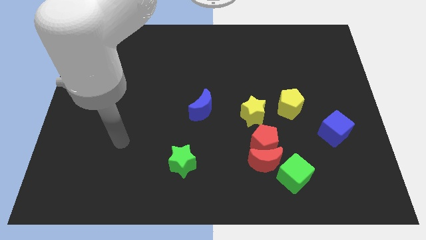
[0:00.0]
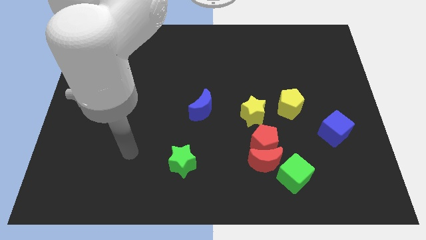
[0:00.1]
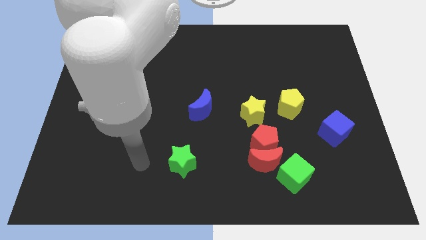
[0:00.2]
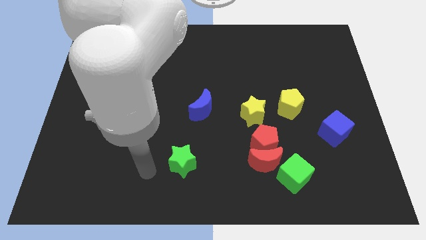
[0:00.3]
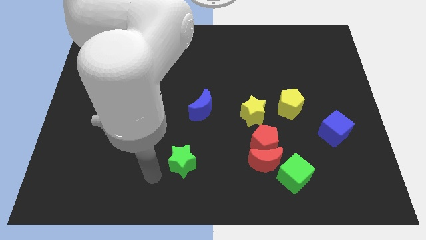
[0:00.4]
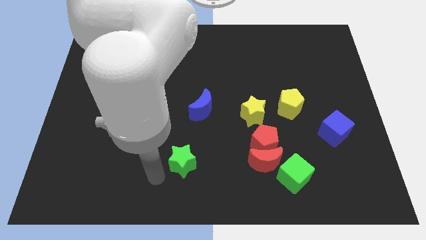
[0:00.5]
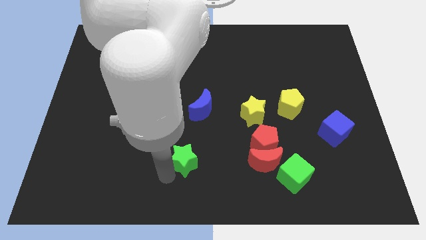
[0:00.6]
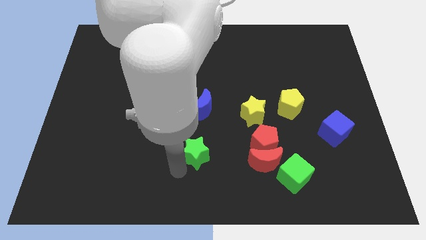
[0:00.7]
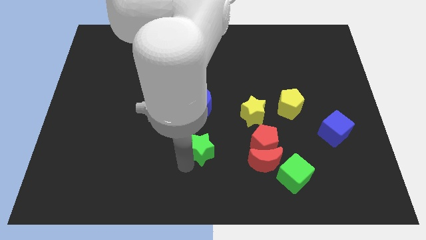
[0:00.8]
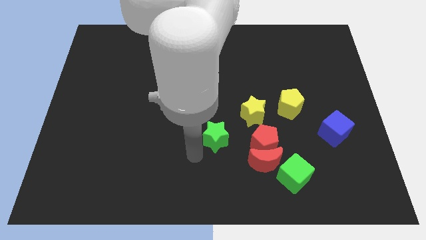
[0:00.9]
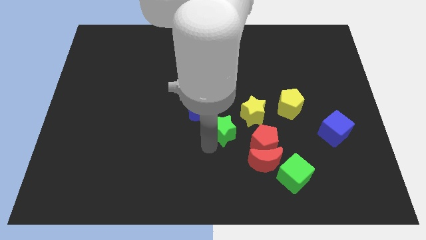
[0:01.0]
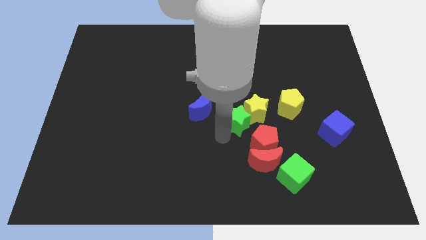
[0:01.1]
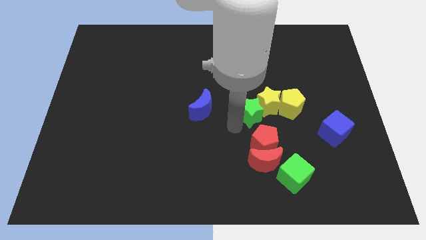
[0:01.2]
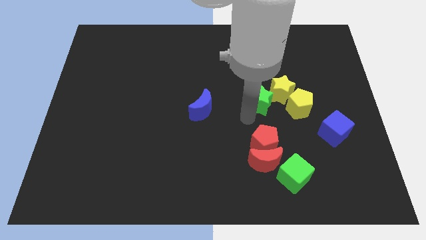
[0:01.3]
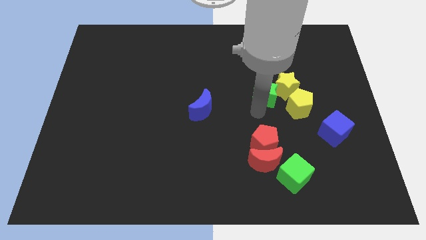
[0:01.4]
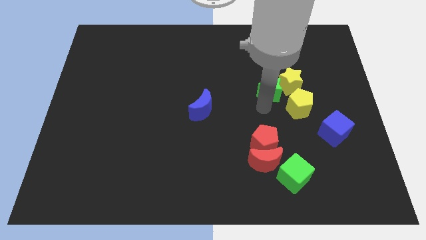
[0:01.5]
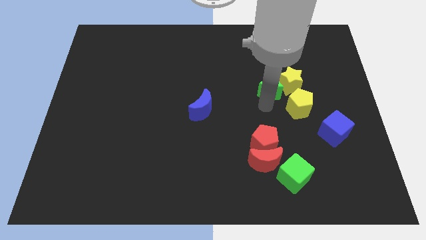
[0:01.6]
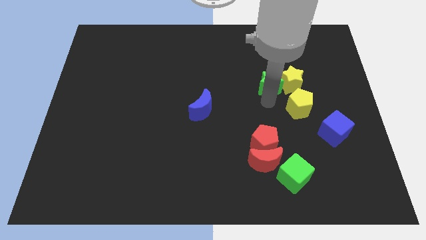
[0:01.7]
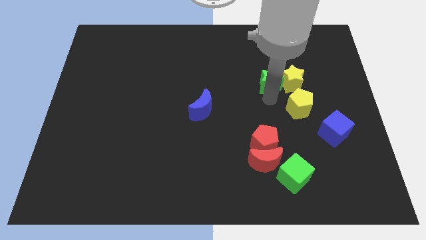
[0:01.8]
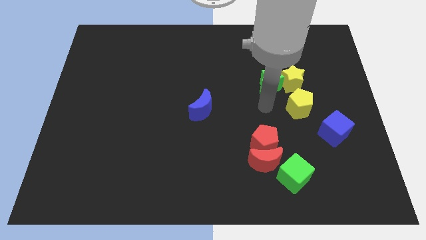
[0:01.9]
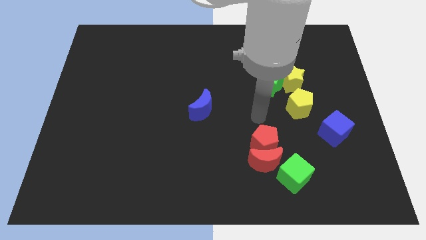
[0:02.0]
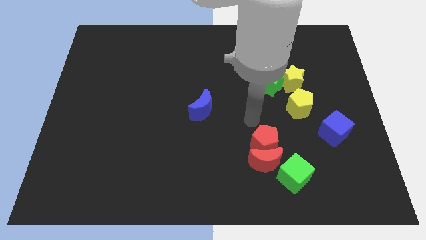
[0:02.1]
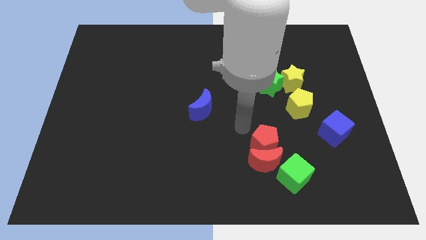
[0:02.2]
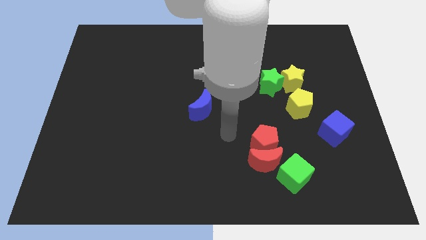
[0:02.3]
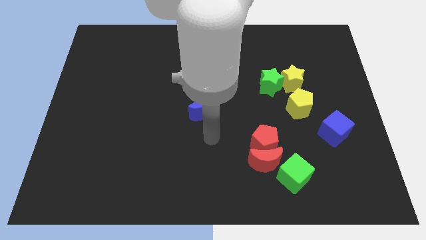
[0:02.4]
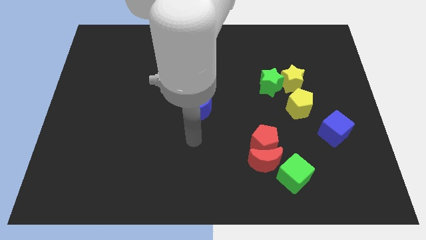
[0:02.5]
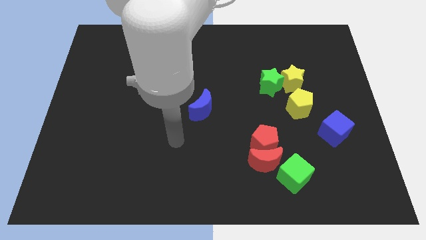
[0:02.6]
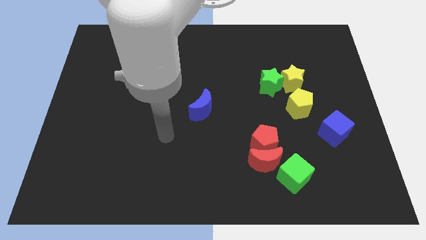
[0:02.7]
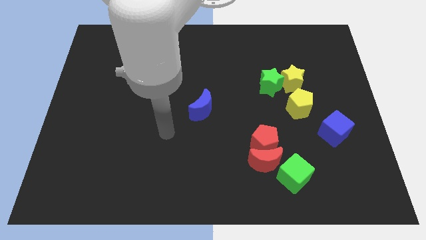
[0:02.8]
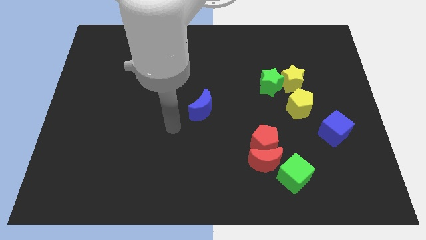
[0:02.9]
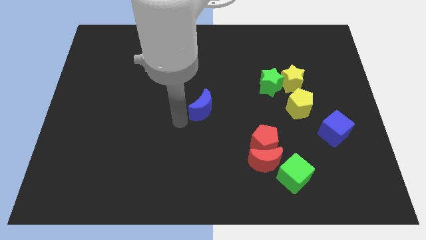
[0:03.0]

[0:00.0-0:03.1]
place the arm near the blue moon

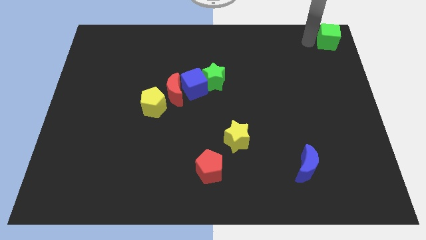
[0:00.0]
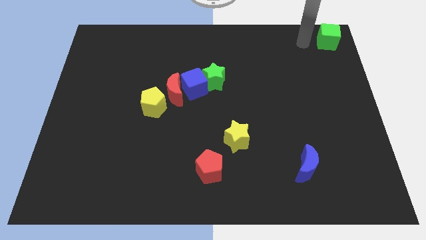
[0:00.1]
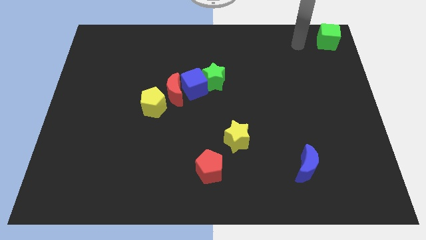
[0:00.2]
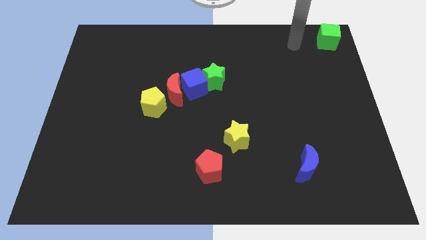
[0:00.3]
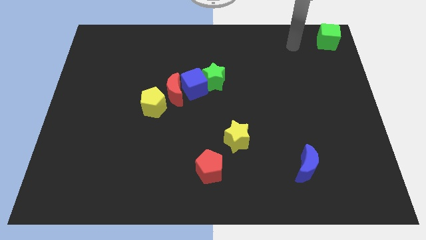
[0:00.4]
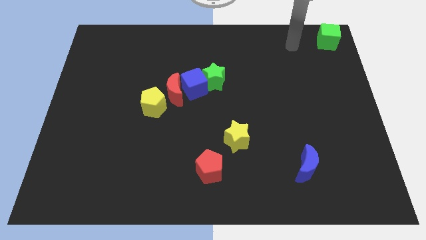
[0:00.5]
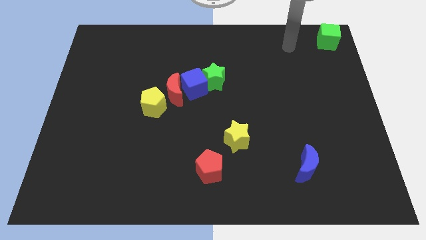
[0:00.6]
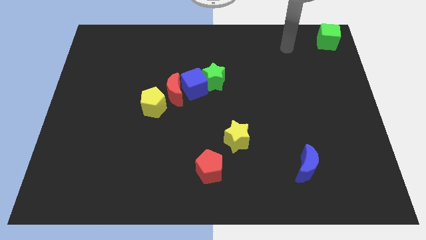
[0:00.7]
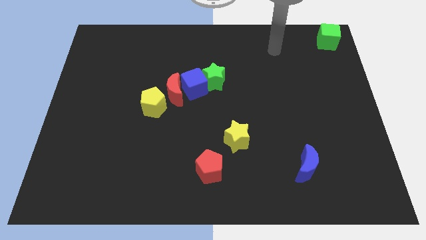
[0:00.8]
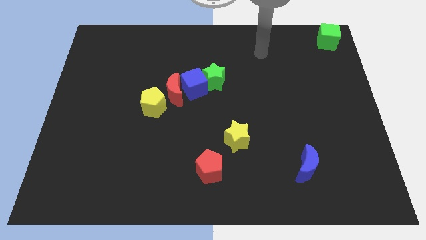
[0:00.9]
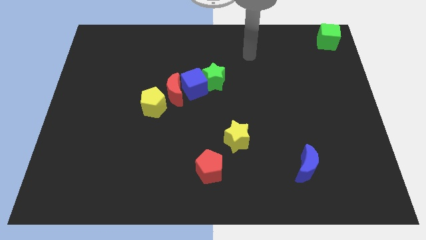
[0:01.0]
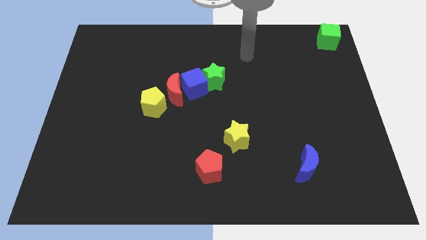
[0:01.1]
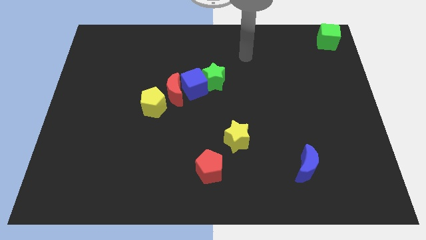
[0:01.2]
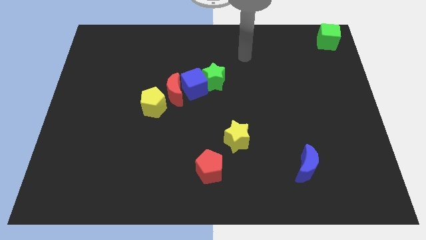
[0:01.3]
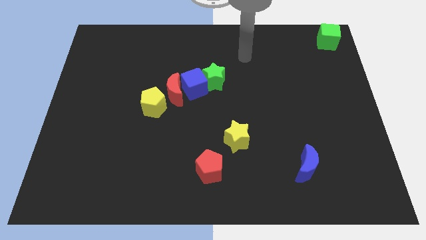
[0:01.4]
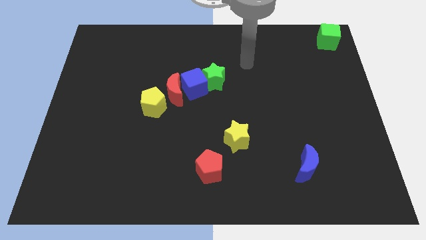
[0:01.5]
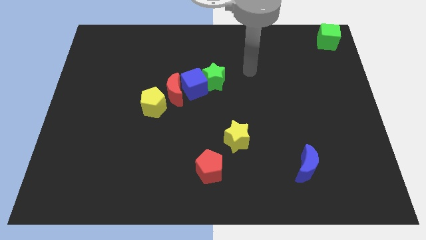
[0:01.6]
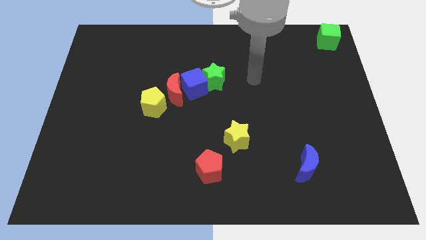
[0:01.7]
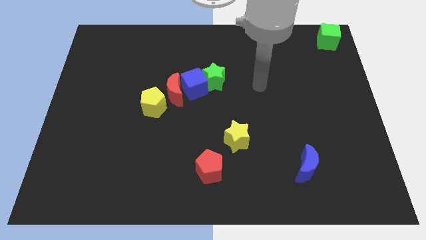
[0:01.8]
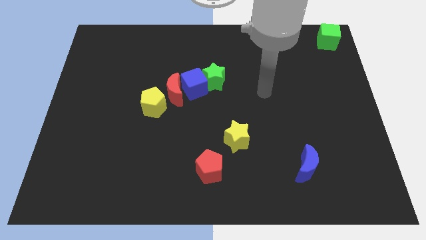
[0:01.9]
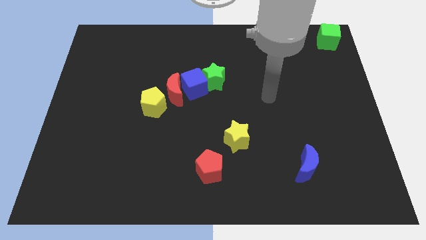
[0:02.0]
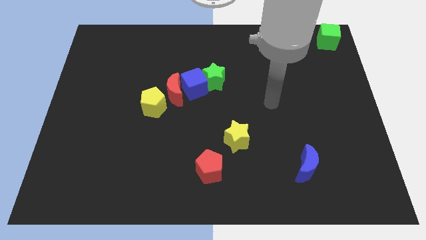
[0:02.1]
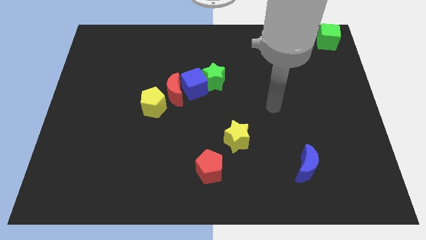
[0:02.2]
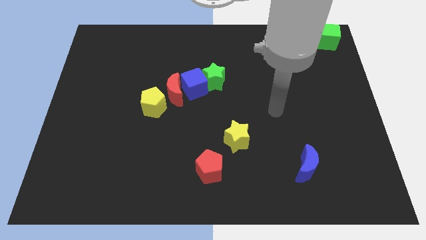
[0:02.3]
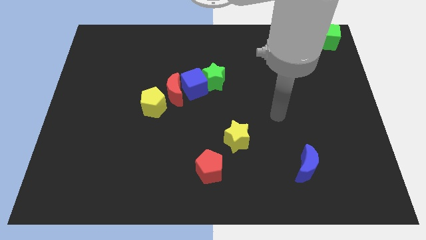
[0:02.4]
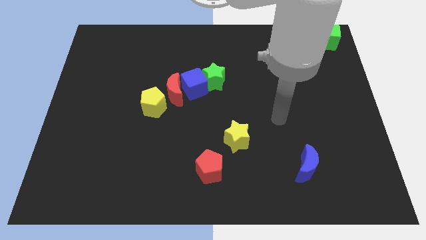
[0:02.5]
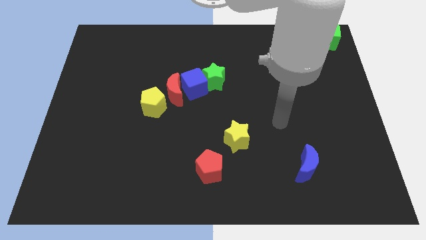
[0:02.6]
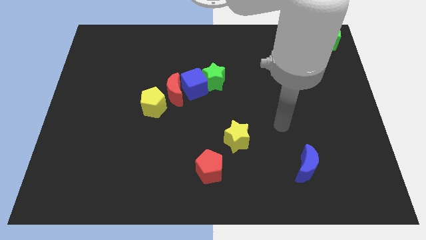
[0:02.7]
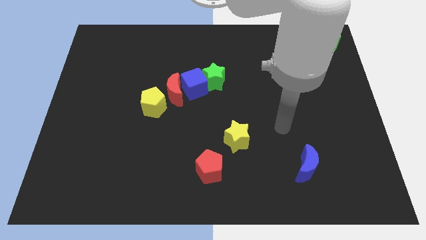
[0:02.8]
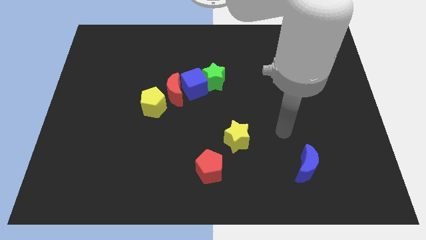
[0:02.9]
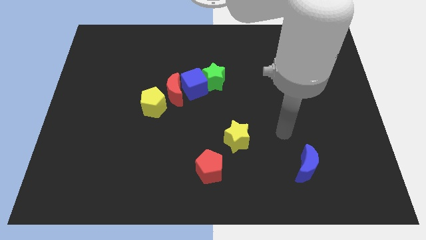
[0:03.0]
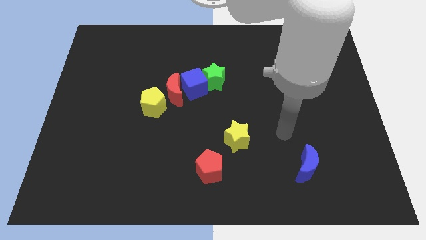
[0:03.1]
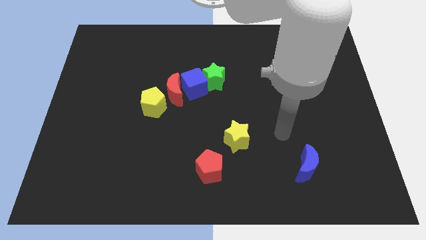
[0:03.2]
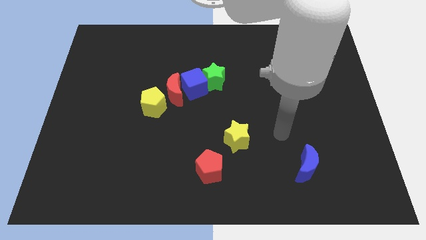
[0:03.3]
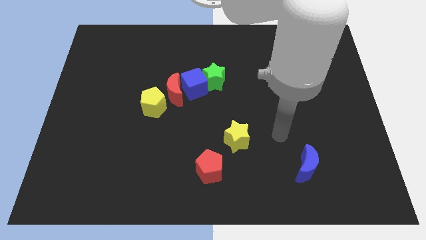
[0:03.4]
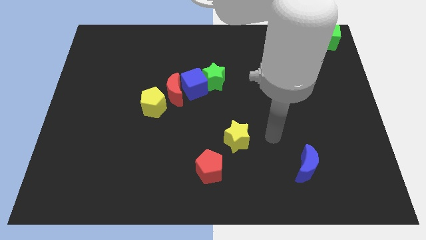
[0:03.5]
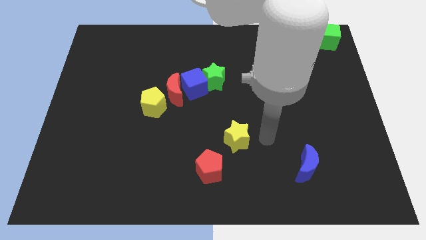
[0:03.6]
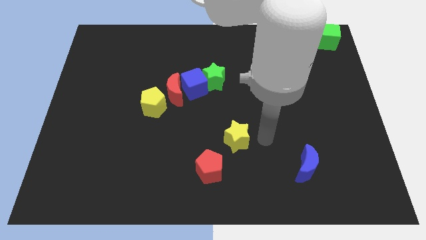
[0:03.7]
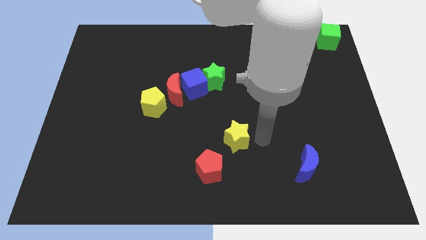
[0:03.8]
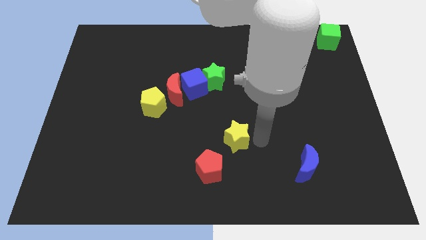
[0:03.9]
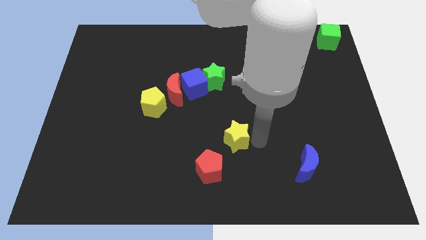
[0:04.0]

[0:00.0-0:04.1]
move your arm to the right side of the yellow star

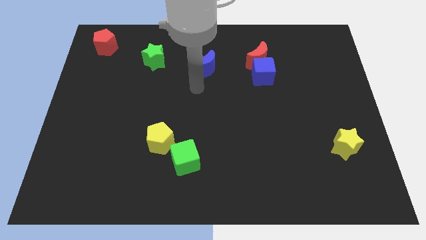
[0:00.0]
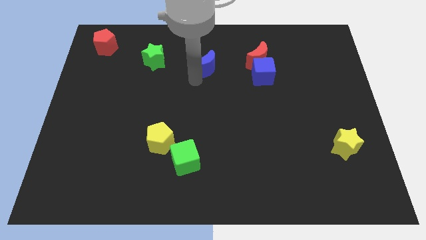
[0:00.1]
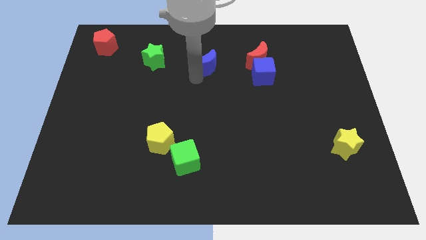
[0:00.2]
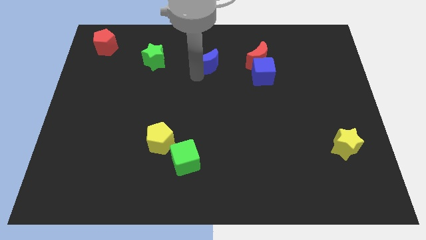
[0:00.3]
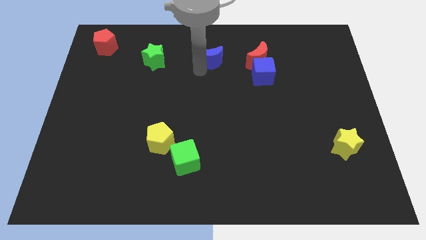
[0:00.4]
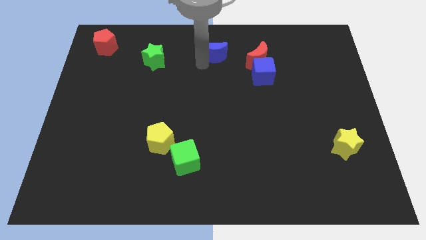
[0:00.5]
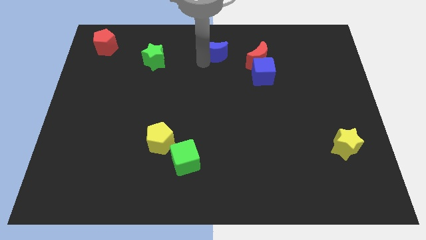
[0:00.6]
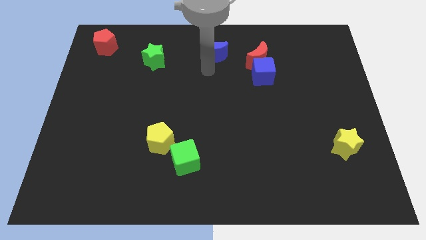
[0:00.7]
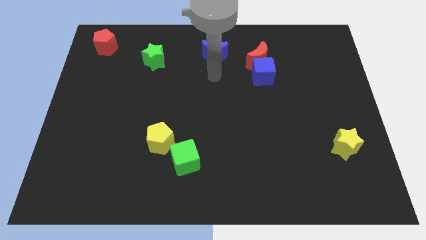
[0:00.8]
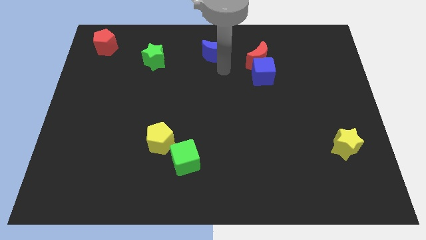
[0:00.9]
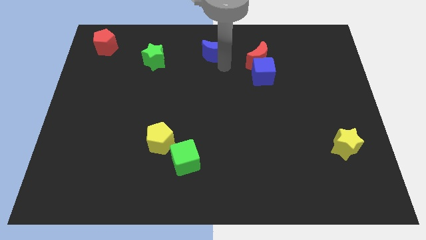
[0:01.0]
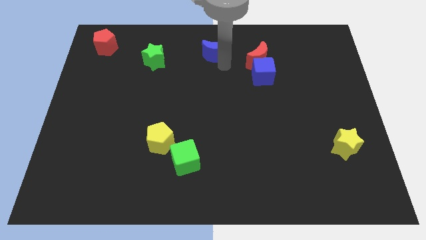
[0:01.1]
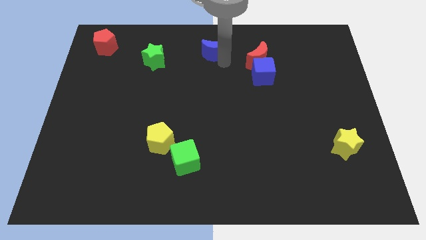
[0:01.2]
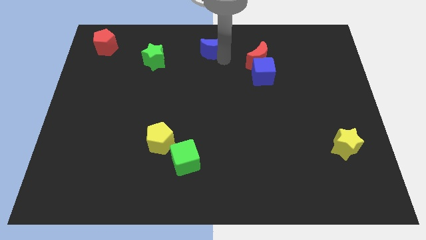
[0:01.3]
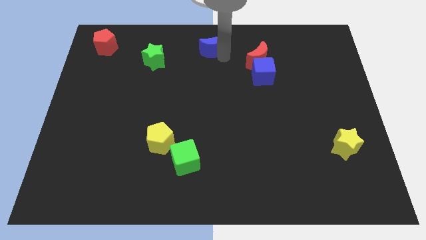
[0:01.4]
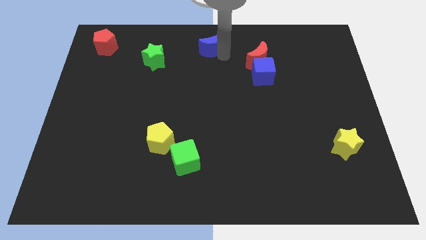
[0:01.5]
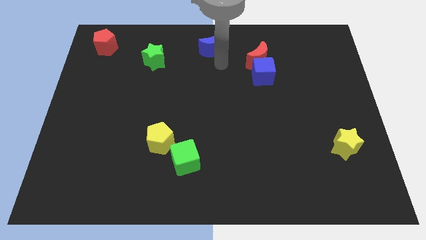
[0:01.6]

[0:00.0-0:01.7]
slide the blue crescent slightly towards up
